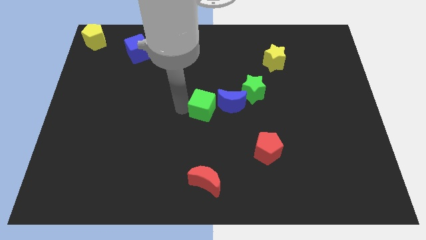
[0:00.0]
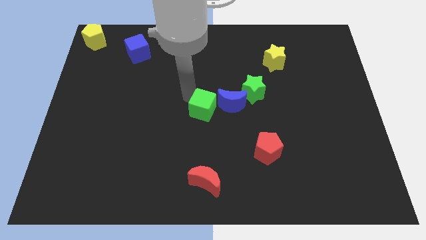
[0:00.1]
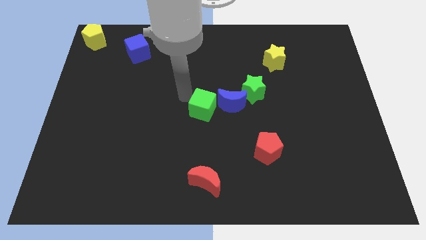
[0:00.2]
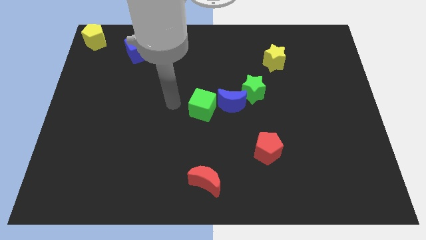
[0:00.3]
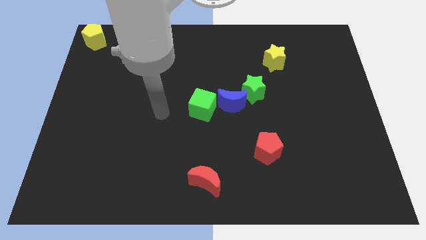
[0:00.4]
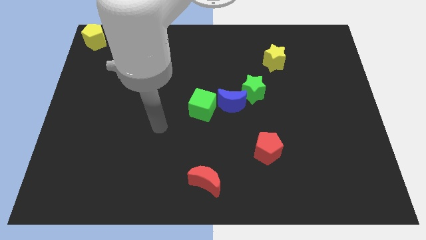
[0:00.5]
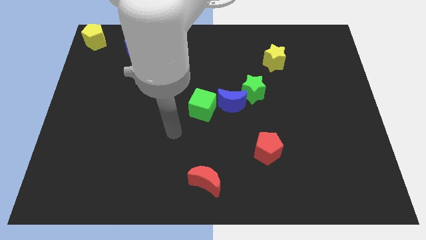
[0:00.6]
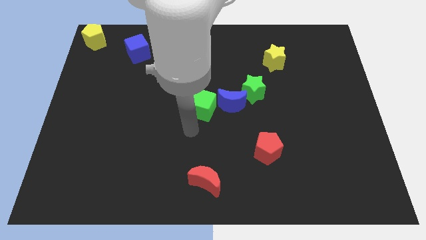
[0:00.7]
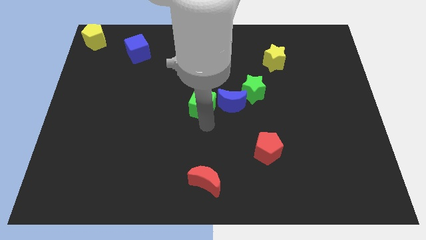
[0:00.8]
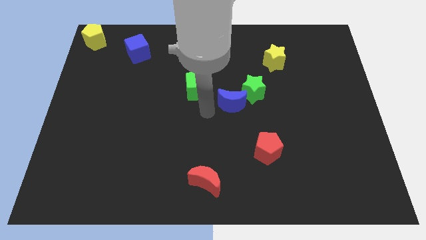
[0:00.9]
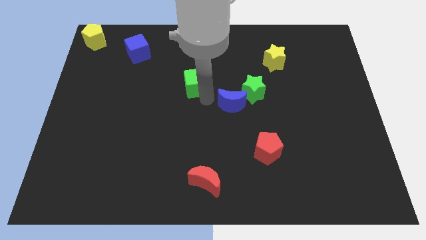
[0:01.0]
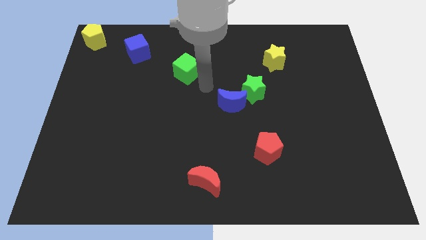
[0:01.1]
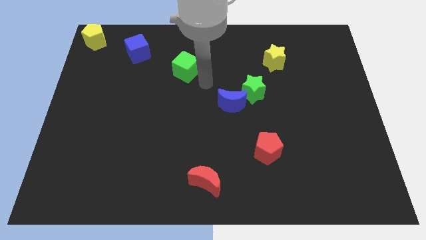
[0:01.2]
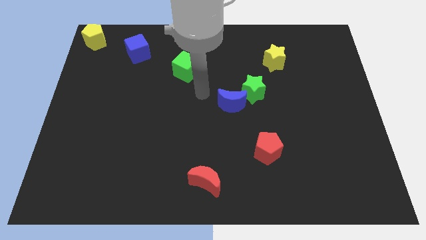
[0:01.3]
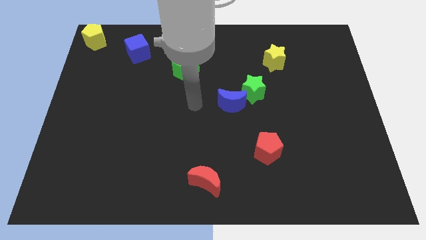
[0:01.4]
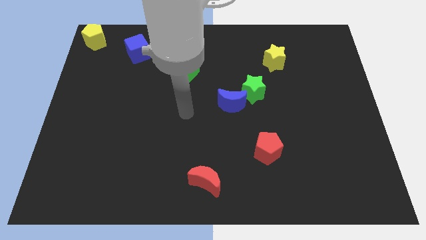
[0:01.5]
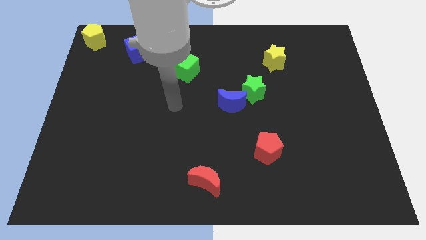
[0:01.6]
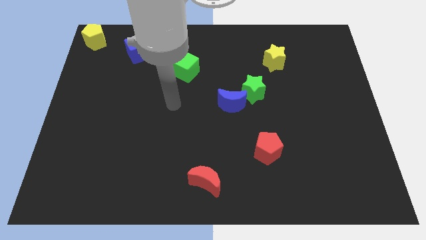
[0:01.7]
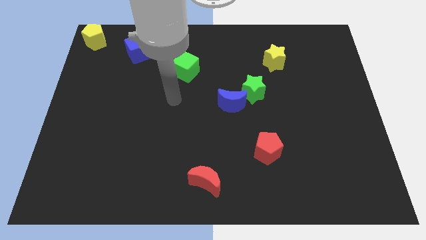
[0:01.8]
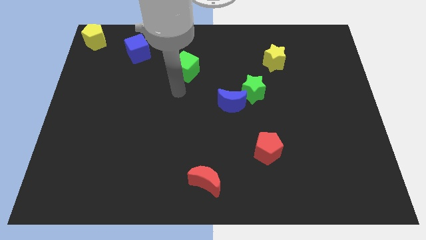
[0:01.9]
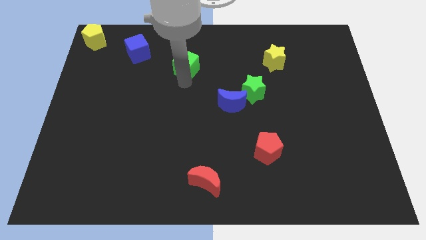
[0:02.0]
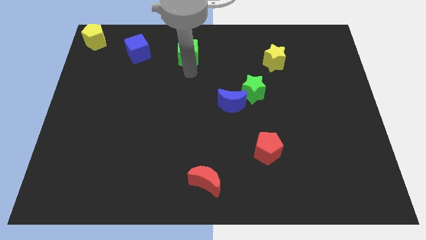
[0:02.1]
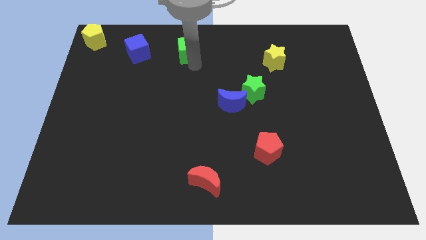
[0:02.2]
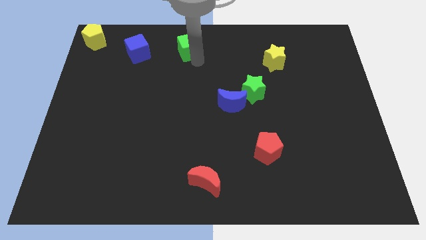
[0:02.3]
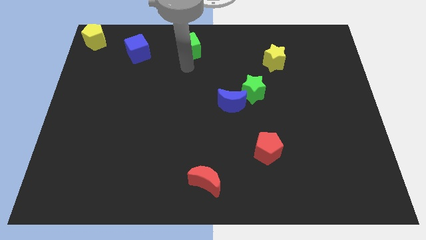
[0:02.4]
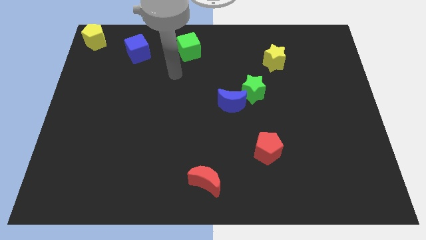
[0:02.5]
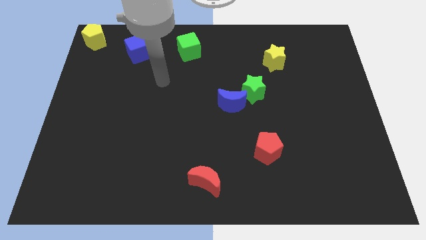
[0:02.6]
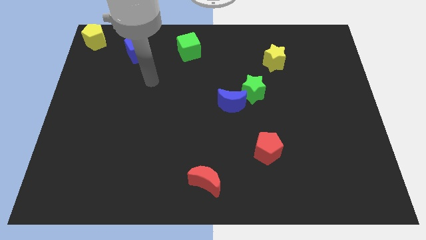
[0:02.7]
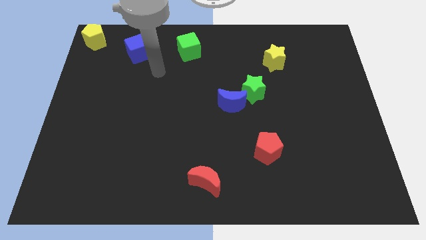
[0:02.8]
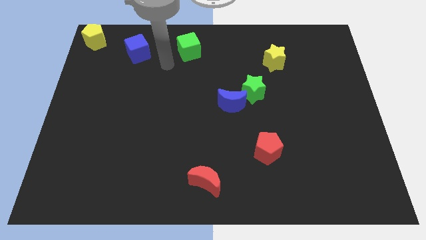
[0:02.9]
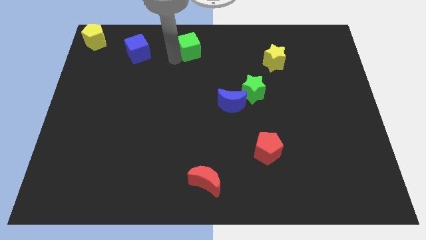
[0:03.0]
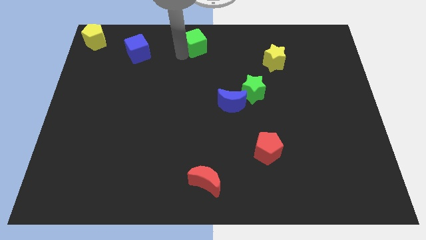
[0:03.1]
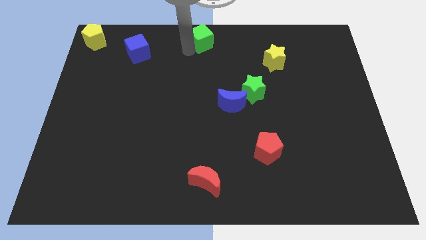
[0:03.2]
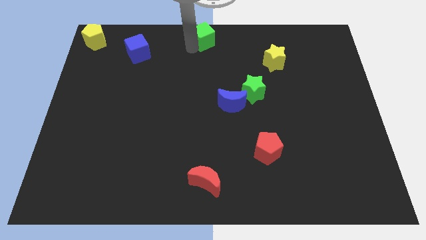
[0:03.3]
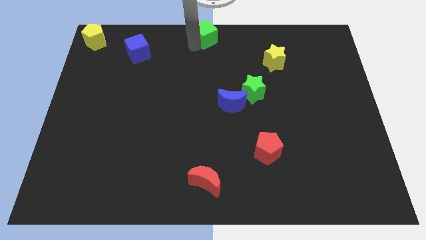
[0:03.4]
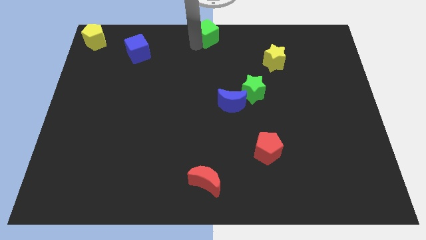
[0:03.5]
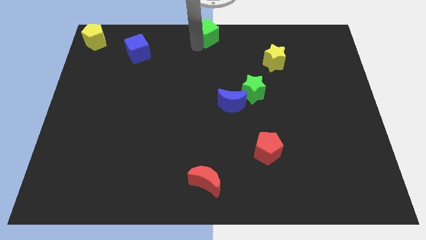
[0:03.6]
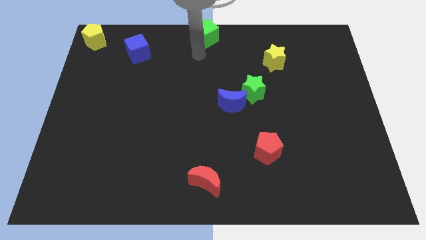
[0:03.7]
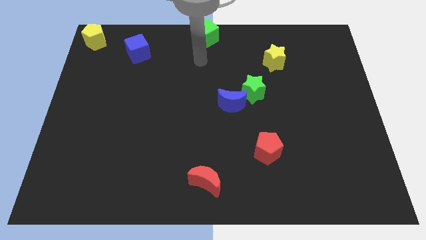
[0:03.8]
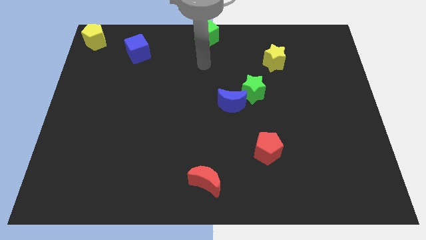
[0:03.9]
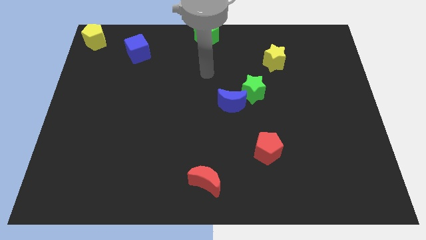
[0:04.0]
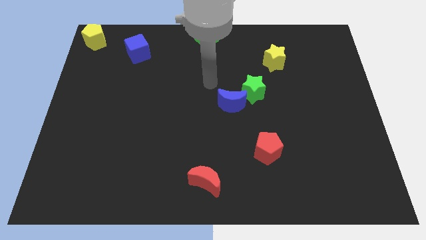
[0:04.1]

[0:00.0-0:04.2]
place the green cube at the top center of the board

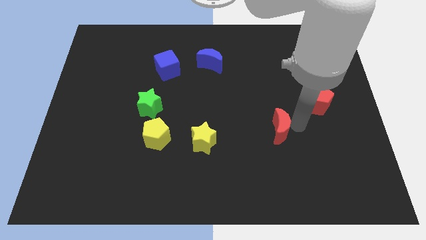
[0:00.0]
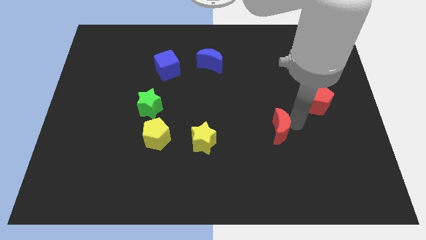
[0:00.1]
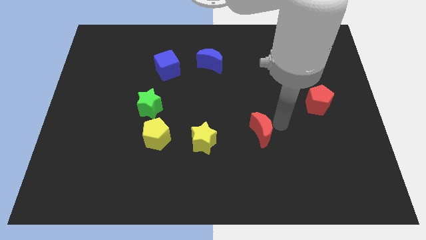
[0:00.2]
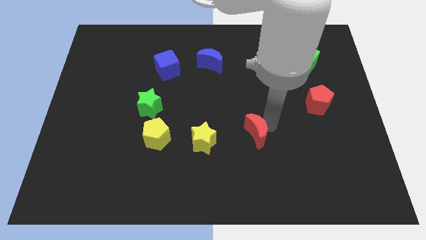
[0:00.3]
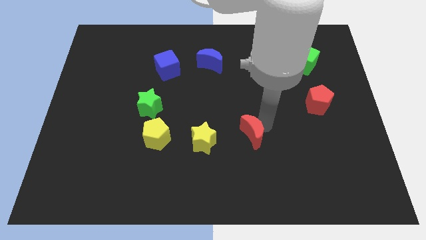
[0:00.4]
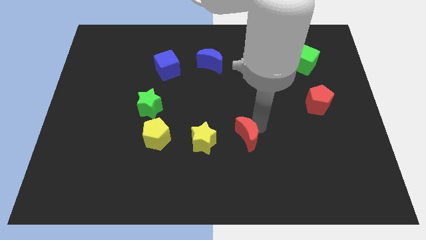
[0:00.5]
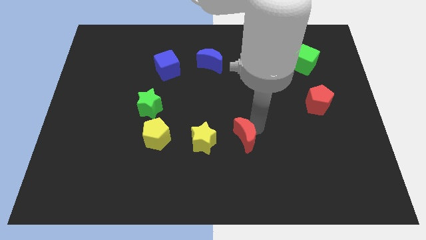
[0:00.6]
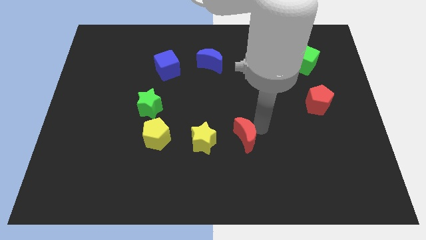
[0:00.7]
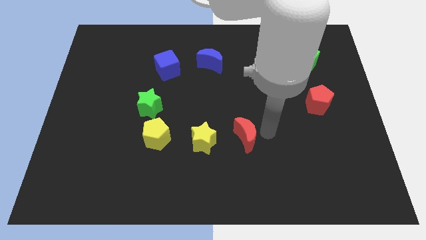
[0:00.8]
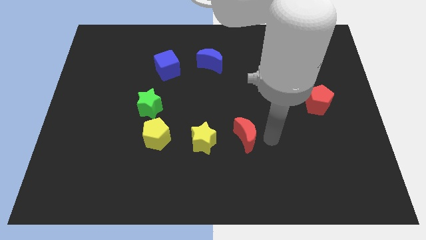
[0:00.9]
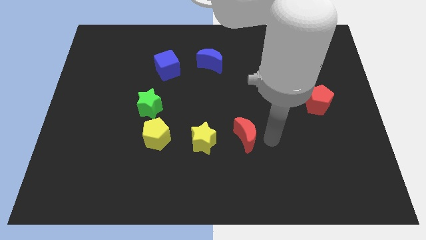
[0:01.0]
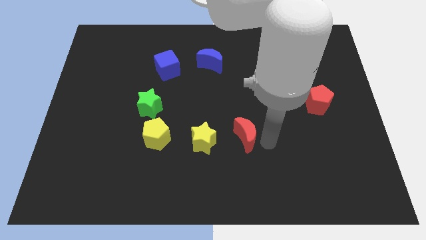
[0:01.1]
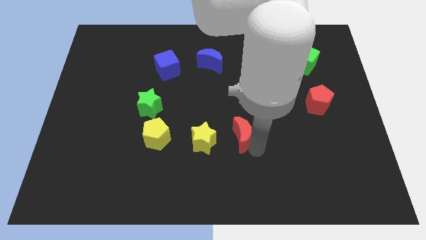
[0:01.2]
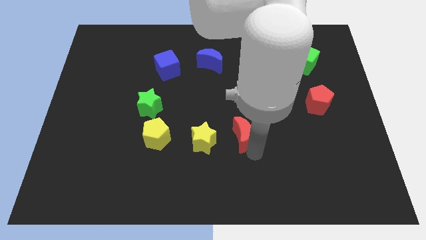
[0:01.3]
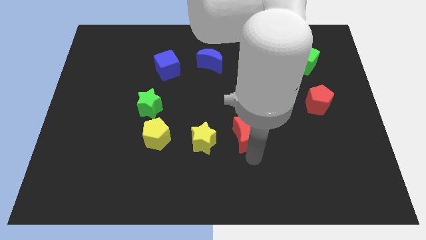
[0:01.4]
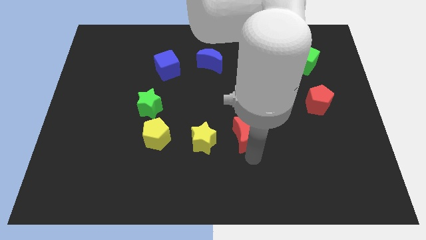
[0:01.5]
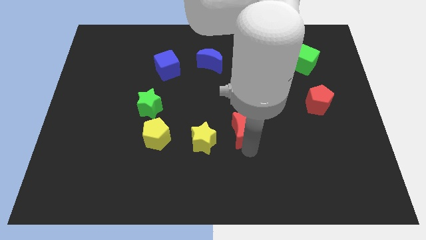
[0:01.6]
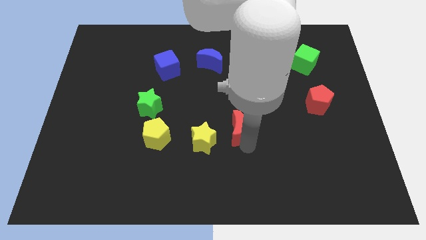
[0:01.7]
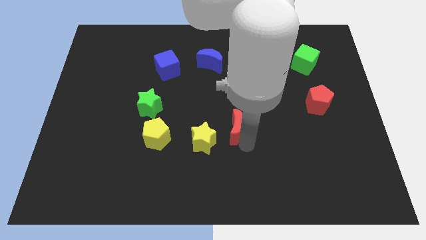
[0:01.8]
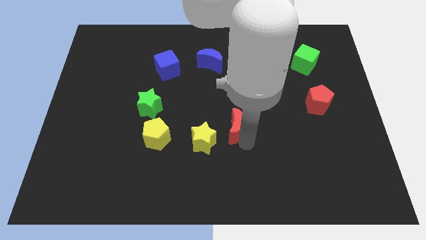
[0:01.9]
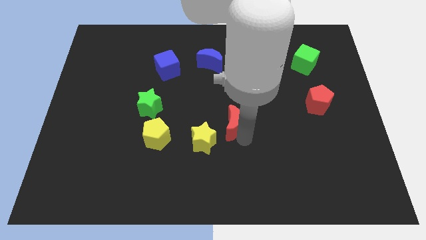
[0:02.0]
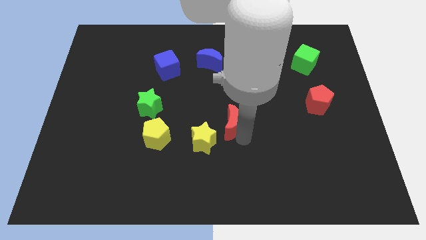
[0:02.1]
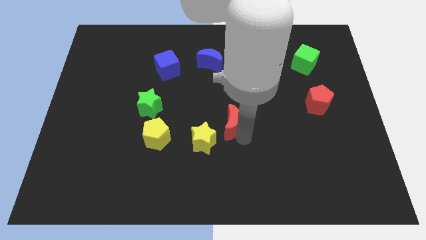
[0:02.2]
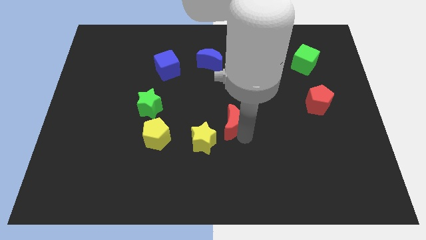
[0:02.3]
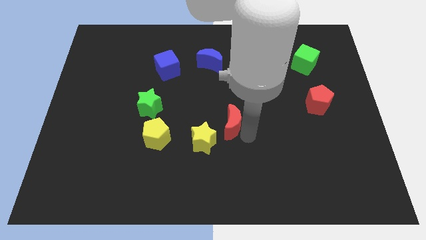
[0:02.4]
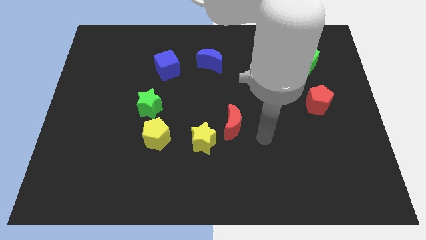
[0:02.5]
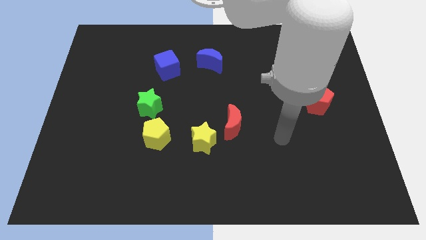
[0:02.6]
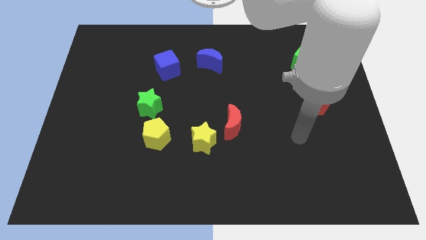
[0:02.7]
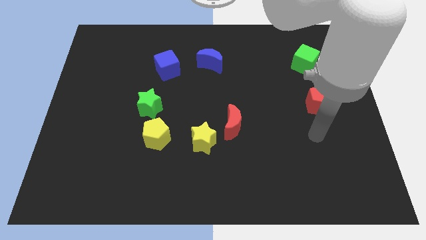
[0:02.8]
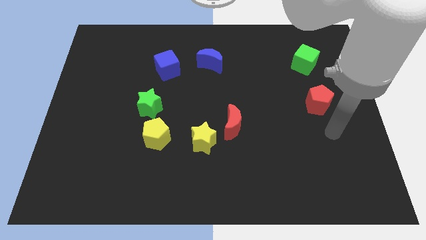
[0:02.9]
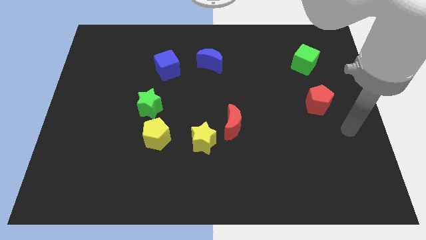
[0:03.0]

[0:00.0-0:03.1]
place red moon right to yellow star

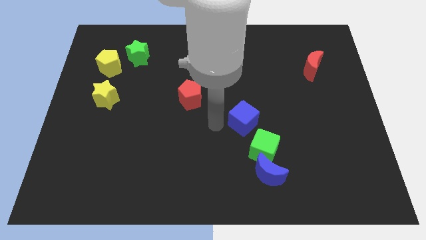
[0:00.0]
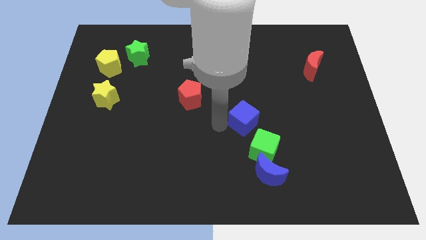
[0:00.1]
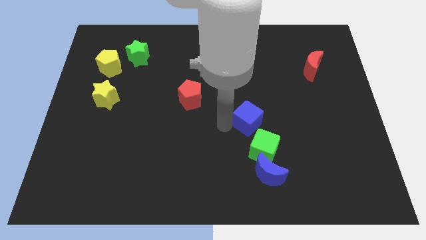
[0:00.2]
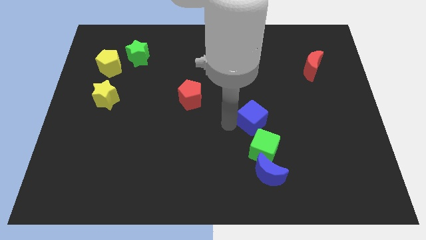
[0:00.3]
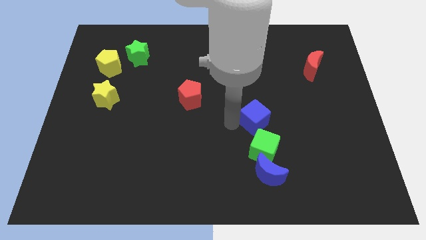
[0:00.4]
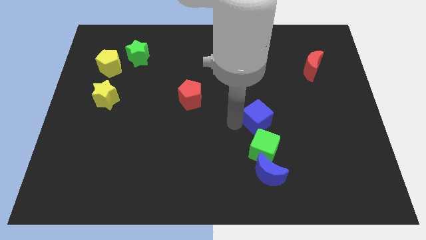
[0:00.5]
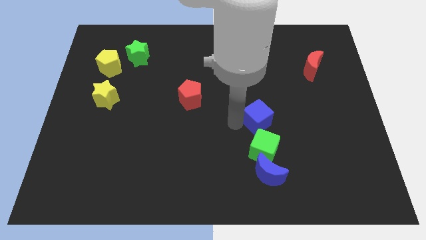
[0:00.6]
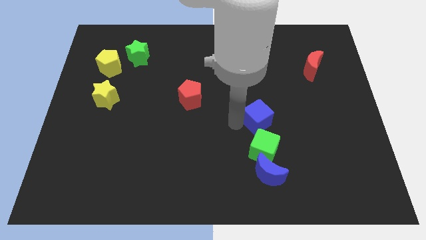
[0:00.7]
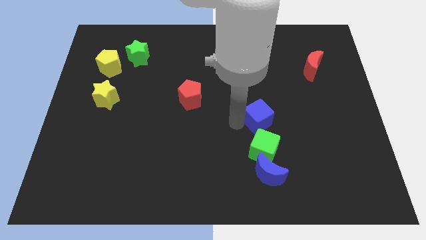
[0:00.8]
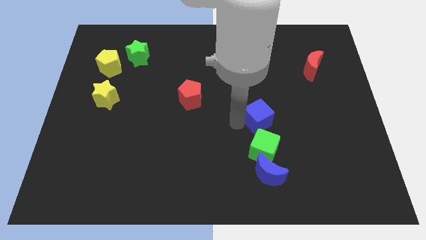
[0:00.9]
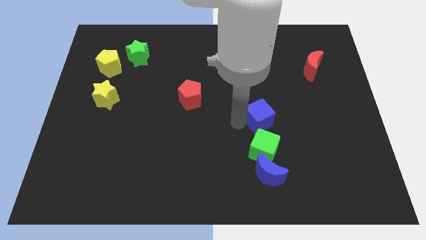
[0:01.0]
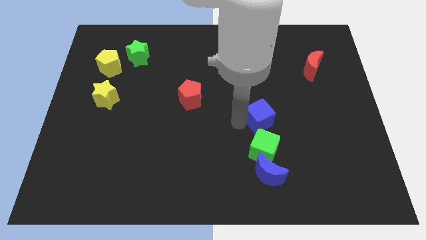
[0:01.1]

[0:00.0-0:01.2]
place the blue cube above the green cube

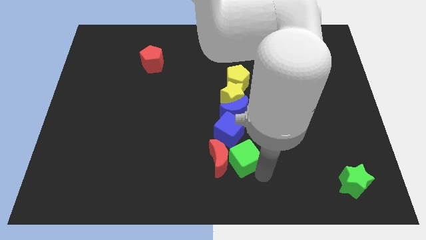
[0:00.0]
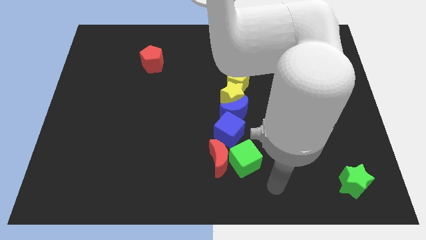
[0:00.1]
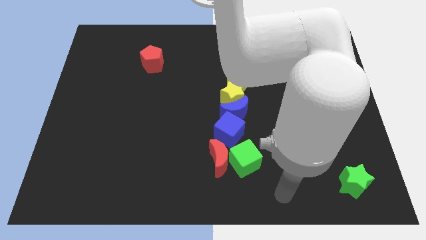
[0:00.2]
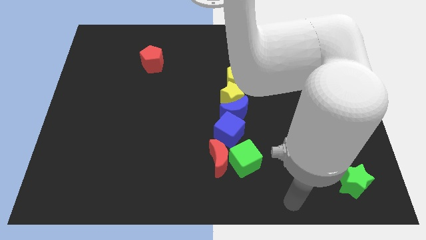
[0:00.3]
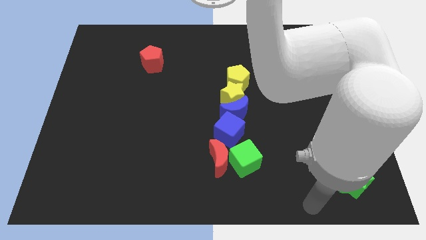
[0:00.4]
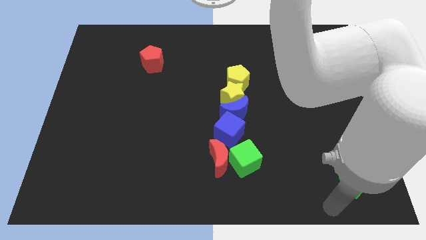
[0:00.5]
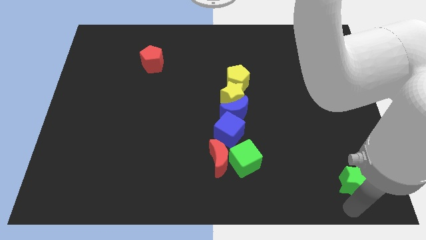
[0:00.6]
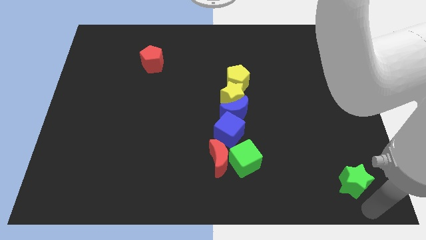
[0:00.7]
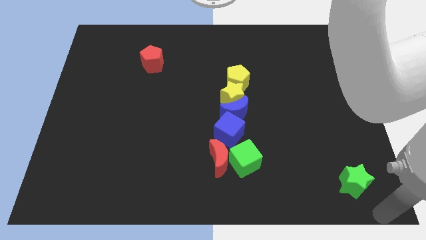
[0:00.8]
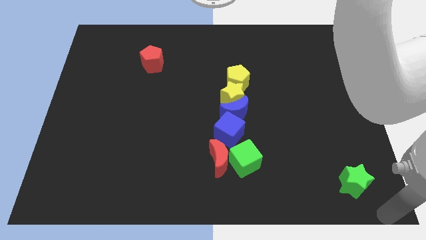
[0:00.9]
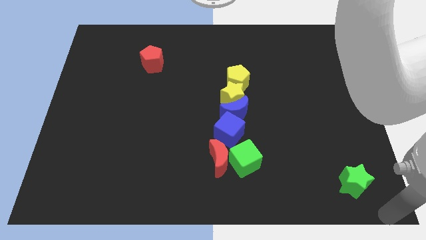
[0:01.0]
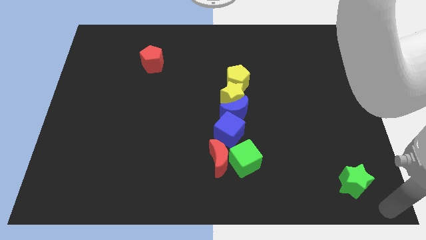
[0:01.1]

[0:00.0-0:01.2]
place arm at bottom right corner
